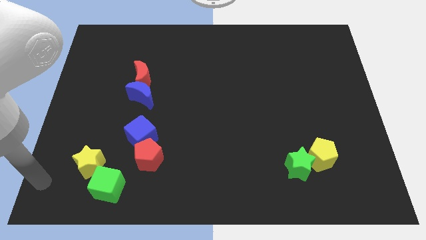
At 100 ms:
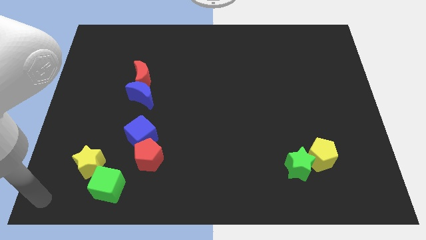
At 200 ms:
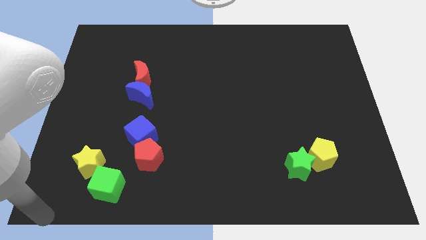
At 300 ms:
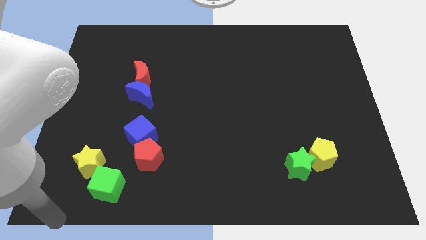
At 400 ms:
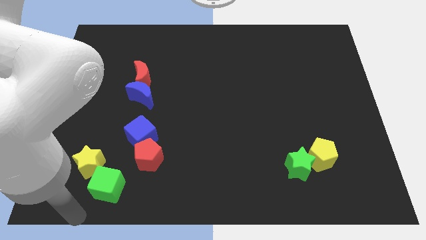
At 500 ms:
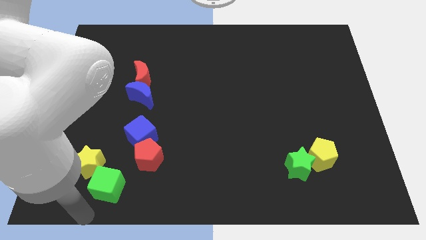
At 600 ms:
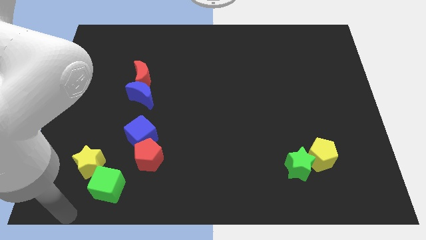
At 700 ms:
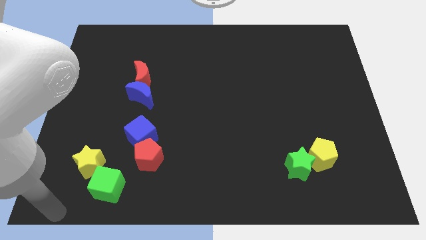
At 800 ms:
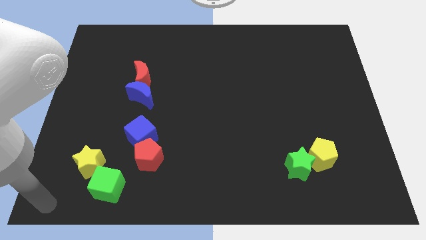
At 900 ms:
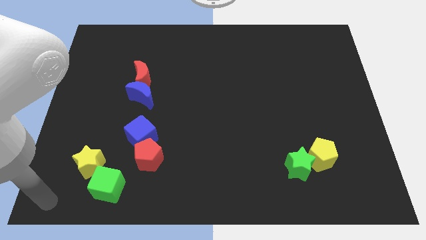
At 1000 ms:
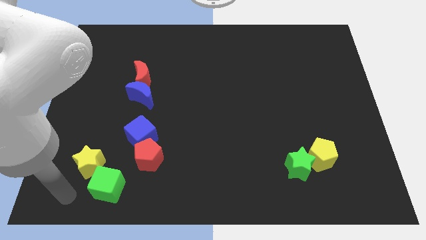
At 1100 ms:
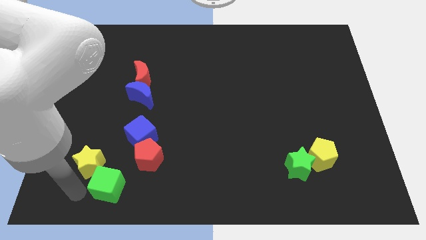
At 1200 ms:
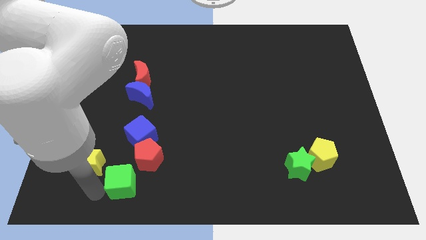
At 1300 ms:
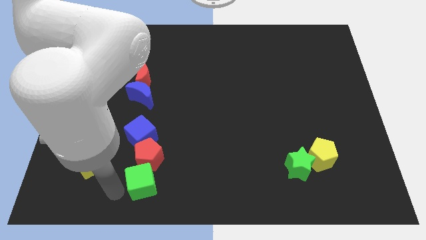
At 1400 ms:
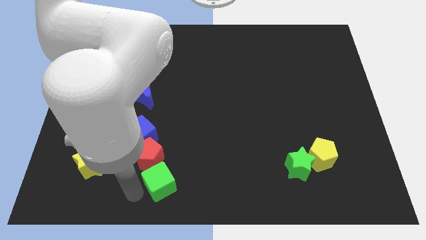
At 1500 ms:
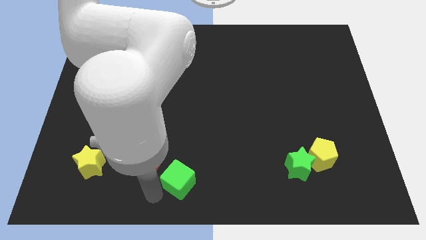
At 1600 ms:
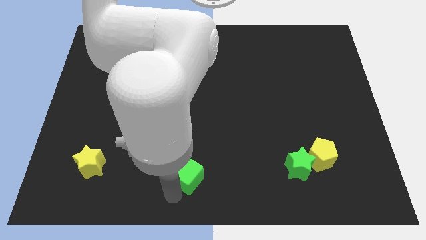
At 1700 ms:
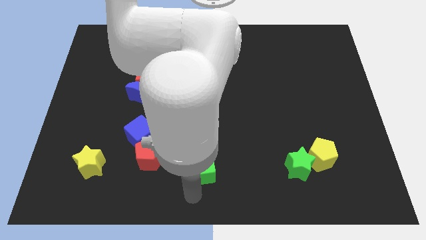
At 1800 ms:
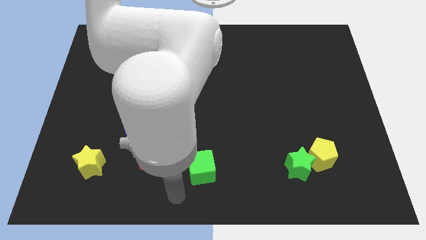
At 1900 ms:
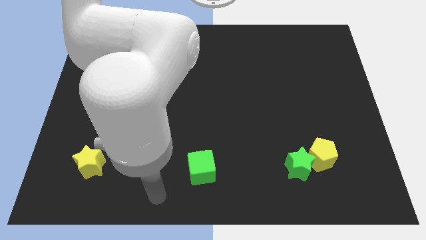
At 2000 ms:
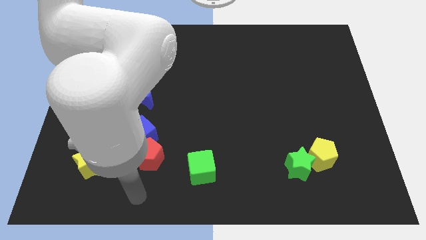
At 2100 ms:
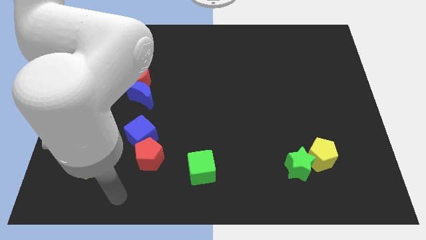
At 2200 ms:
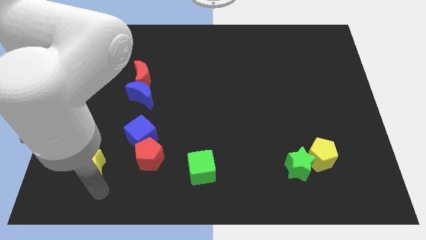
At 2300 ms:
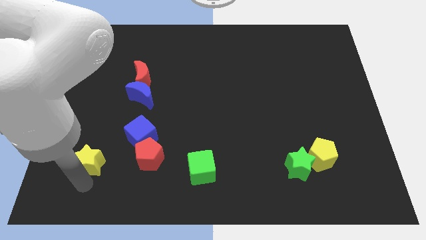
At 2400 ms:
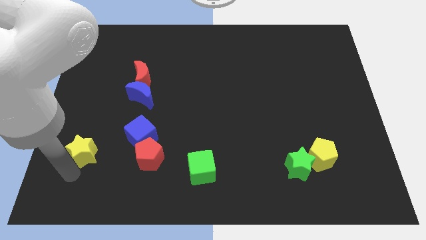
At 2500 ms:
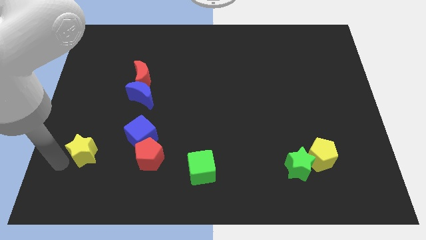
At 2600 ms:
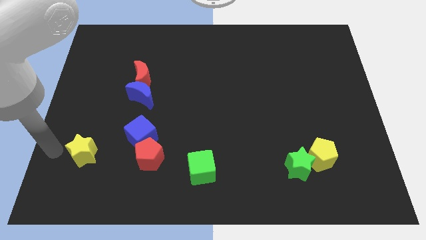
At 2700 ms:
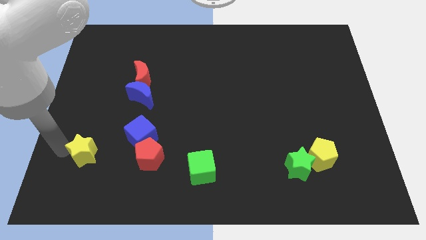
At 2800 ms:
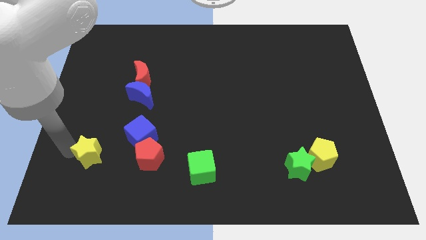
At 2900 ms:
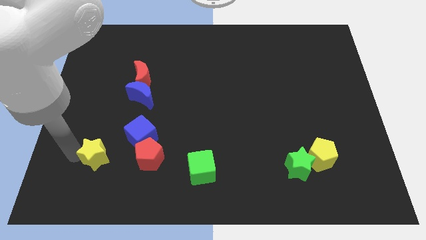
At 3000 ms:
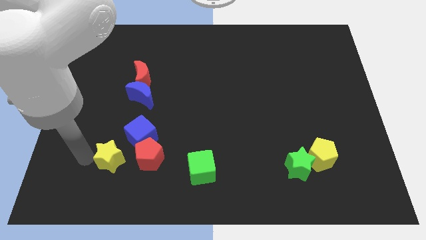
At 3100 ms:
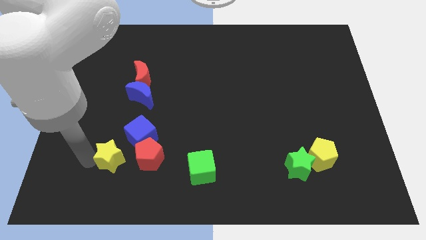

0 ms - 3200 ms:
move green cube to the bottom center of the board

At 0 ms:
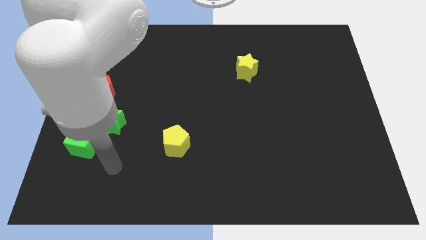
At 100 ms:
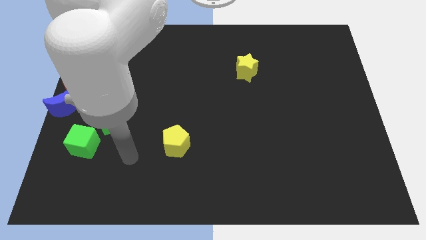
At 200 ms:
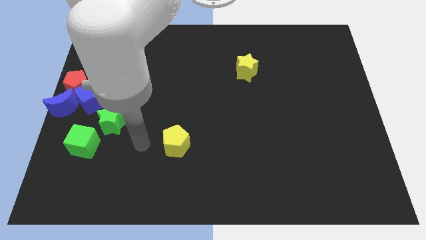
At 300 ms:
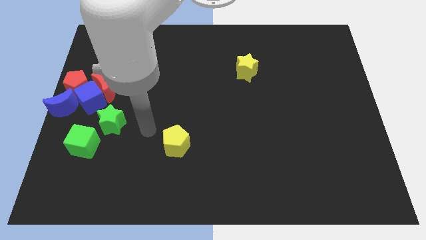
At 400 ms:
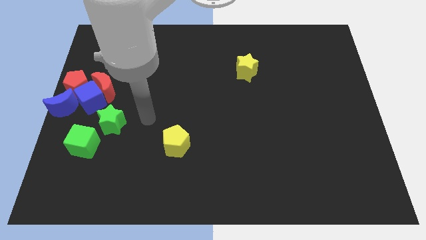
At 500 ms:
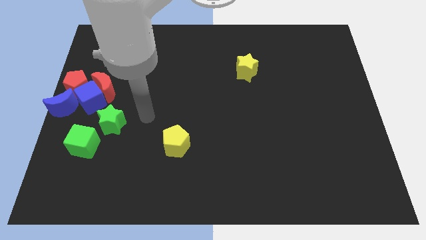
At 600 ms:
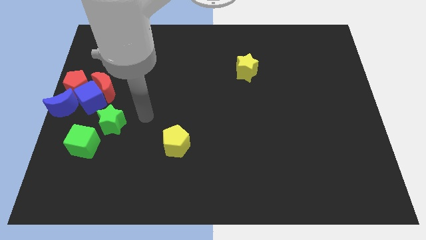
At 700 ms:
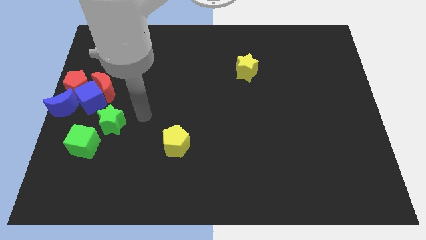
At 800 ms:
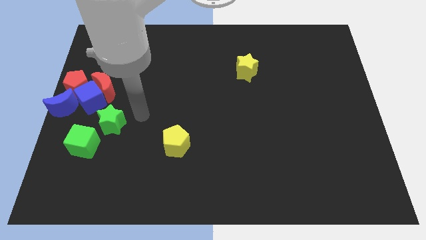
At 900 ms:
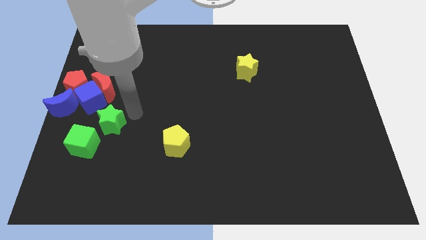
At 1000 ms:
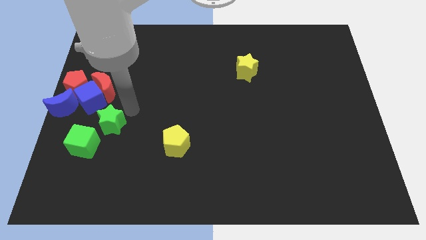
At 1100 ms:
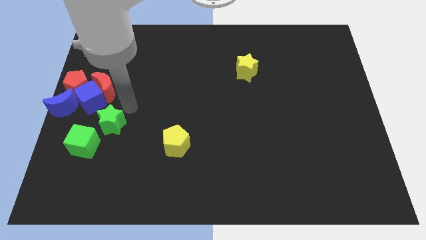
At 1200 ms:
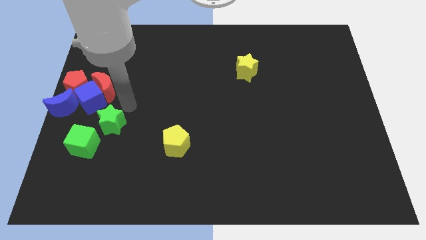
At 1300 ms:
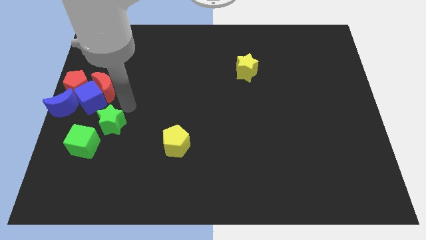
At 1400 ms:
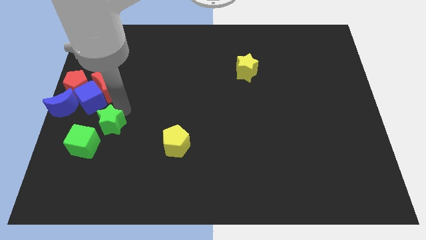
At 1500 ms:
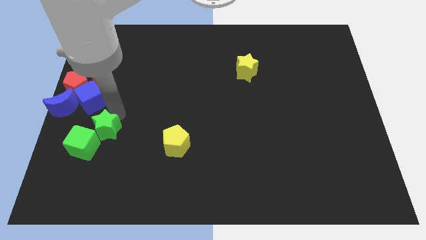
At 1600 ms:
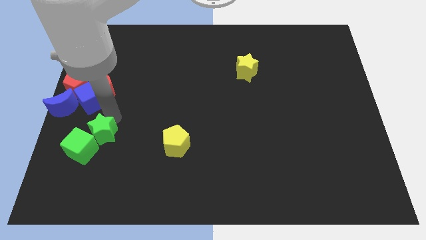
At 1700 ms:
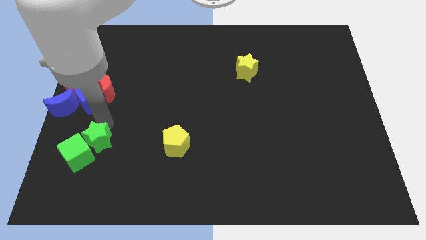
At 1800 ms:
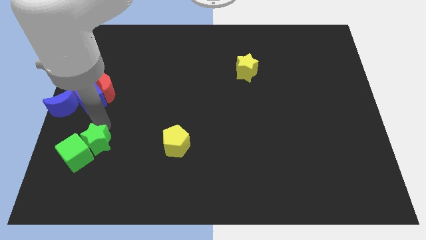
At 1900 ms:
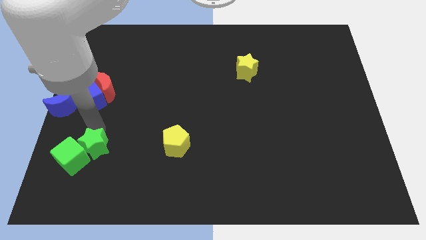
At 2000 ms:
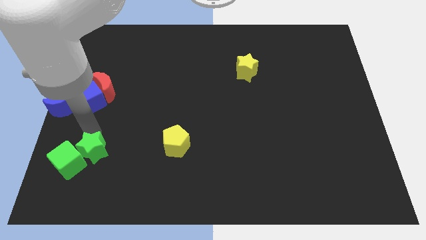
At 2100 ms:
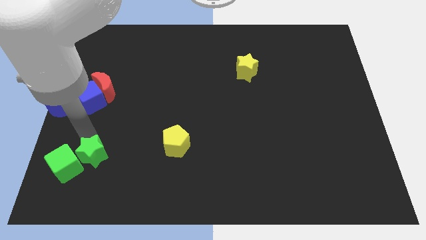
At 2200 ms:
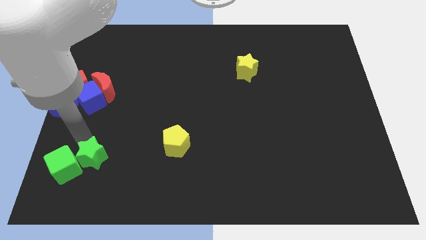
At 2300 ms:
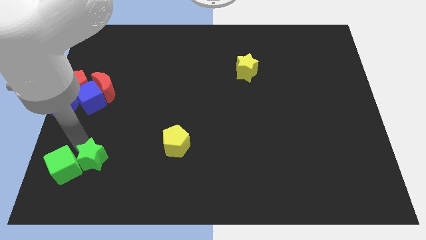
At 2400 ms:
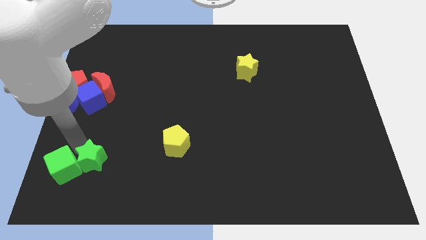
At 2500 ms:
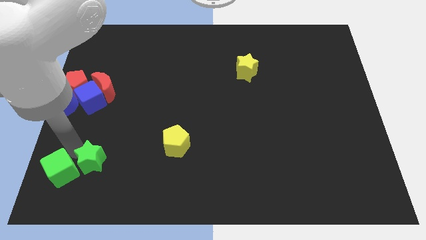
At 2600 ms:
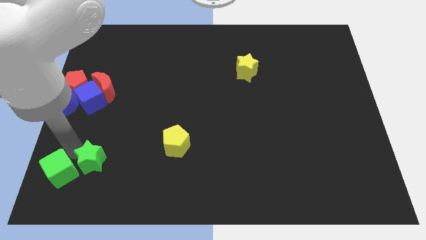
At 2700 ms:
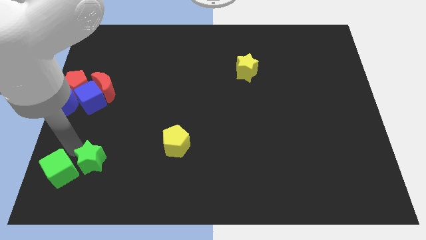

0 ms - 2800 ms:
put the green blocks together

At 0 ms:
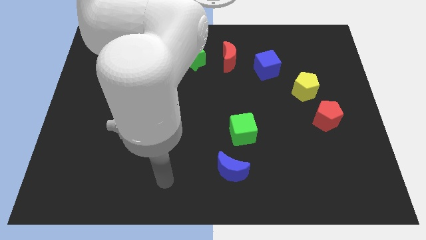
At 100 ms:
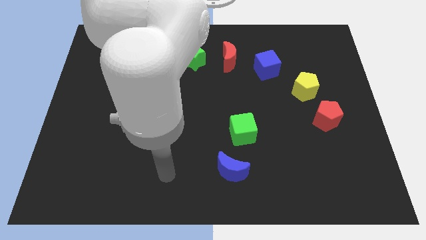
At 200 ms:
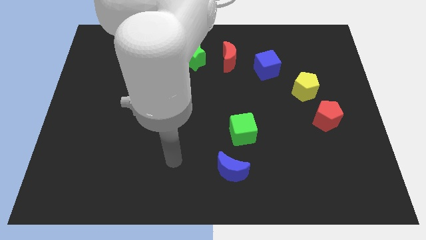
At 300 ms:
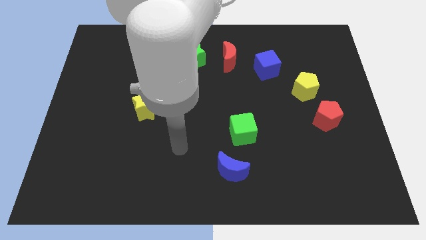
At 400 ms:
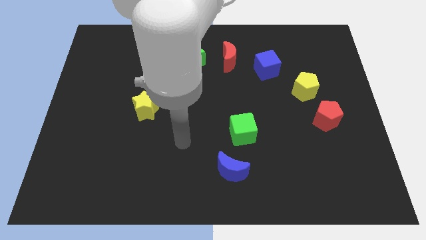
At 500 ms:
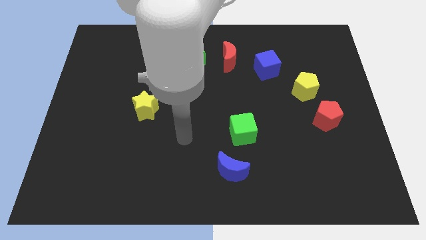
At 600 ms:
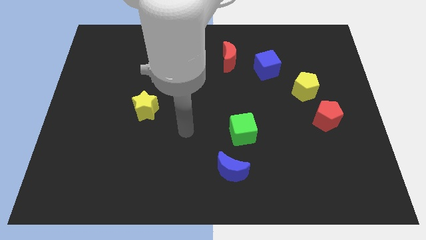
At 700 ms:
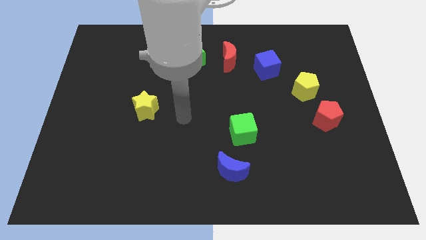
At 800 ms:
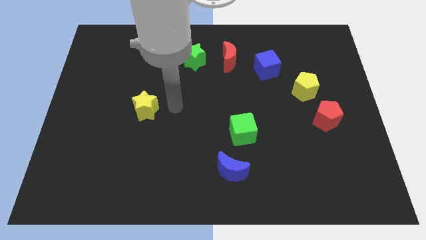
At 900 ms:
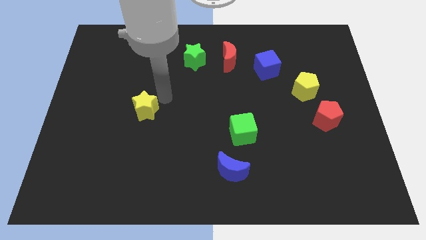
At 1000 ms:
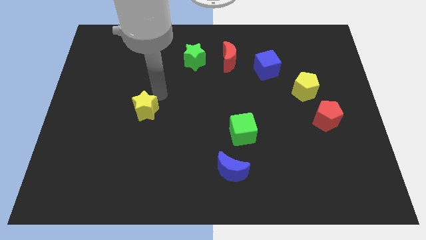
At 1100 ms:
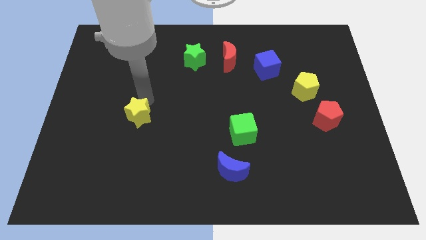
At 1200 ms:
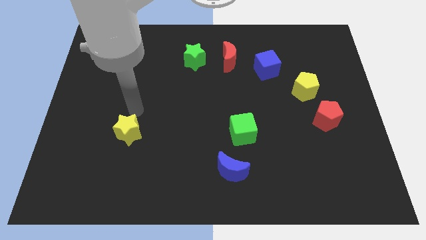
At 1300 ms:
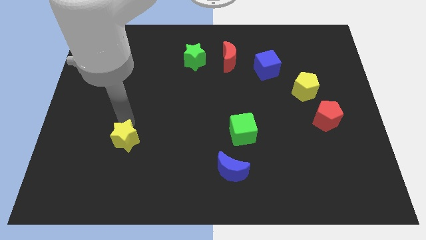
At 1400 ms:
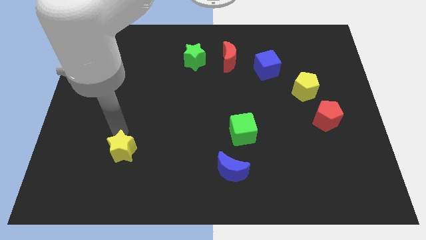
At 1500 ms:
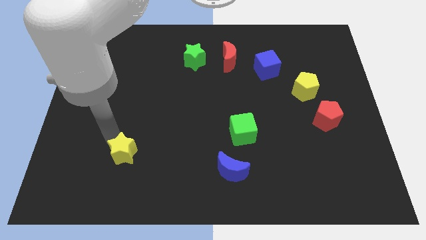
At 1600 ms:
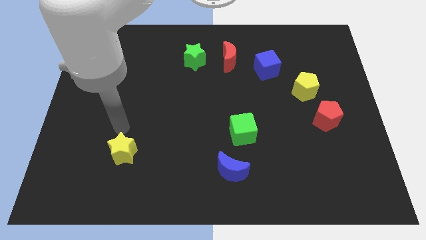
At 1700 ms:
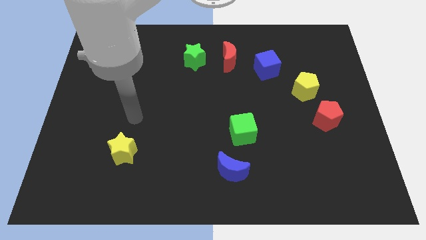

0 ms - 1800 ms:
move yellow star downwards

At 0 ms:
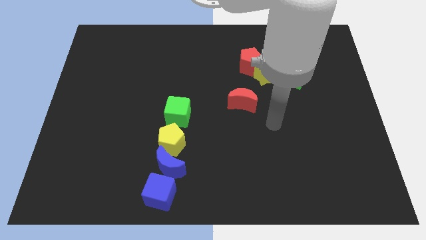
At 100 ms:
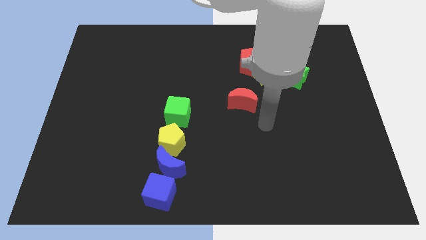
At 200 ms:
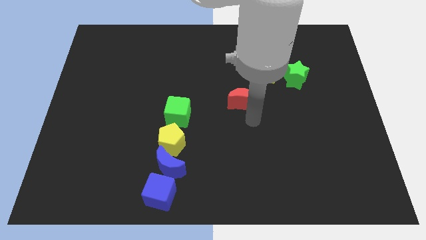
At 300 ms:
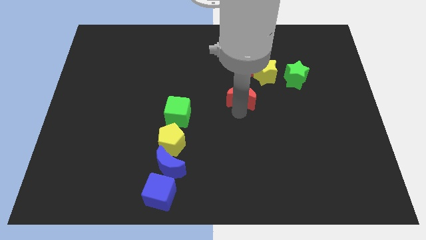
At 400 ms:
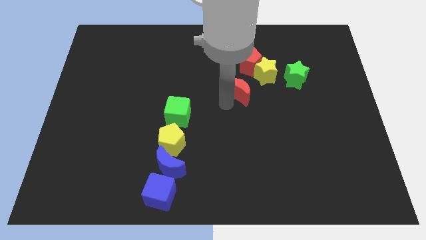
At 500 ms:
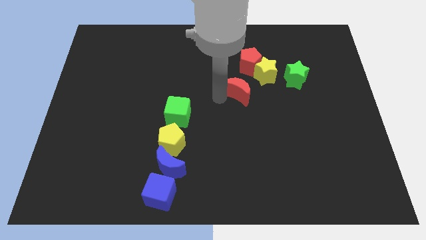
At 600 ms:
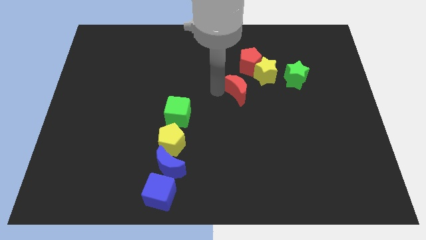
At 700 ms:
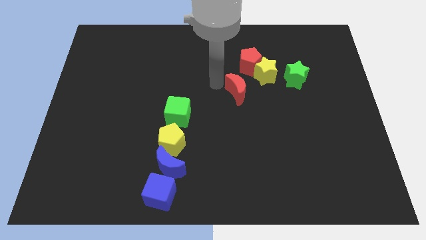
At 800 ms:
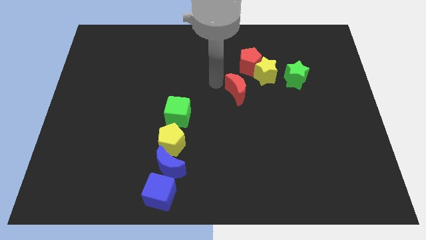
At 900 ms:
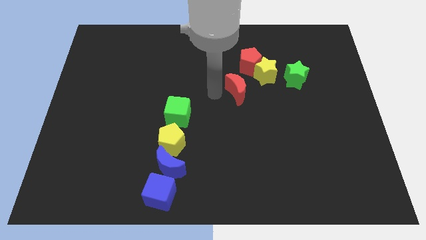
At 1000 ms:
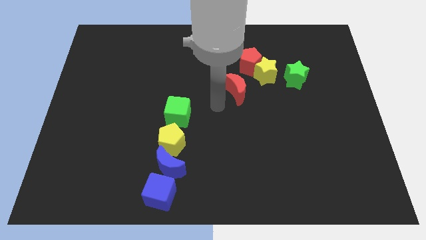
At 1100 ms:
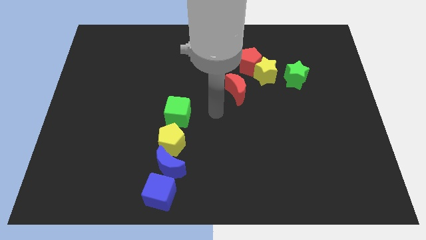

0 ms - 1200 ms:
move the red moon close to the red pentagon
